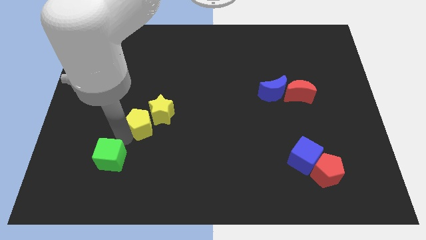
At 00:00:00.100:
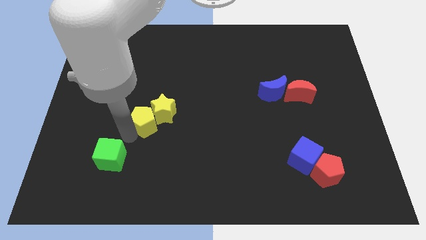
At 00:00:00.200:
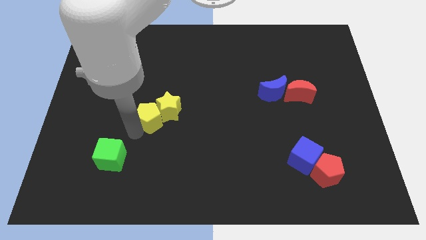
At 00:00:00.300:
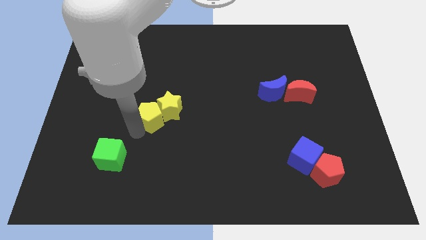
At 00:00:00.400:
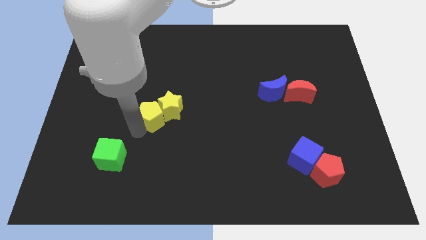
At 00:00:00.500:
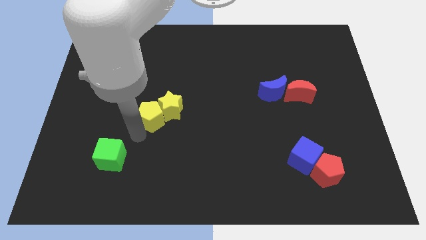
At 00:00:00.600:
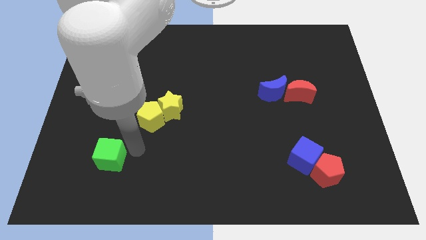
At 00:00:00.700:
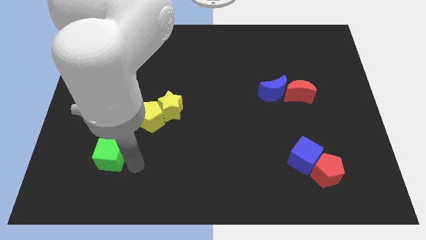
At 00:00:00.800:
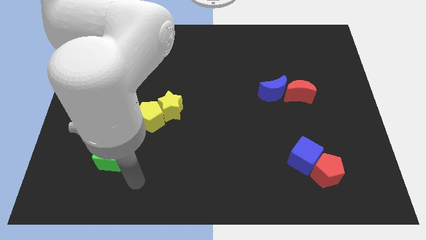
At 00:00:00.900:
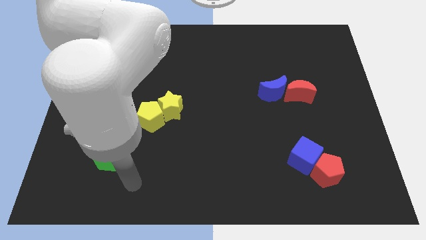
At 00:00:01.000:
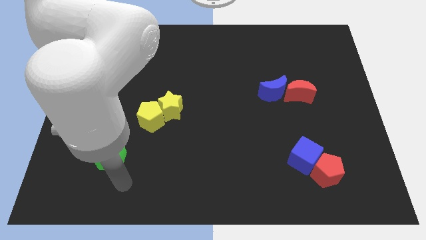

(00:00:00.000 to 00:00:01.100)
push the yellow blocks towards the center of the board

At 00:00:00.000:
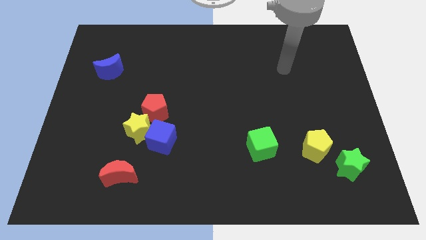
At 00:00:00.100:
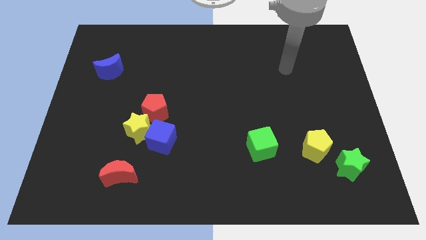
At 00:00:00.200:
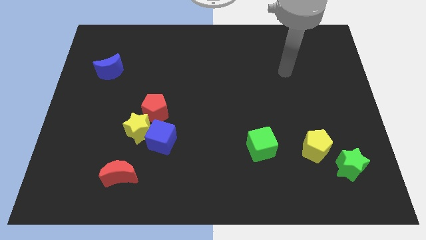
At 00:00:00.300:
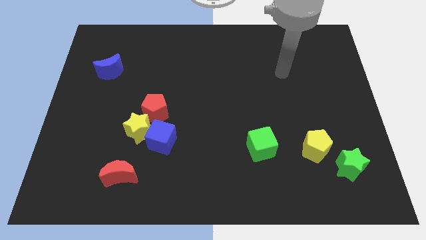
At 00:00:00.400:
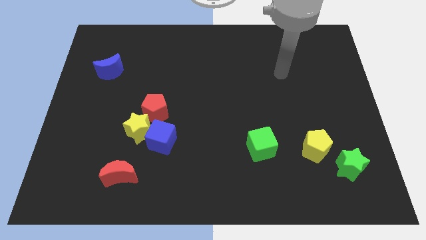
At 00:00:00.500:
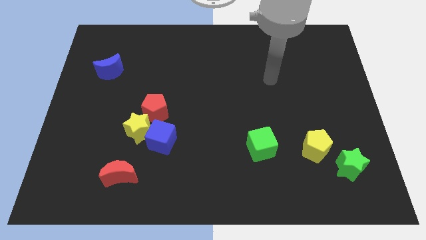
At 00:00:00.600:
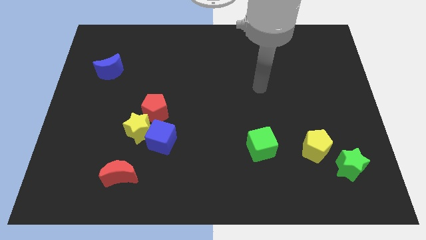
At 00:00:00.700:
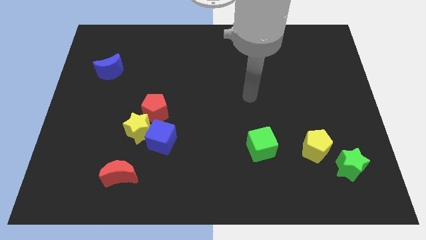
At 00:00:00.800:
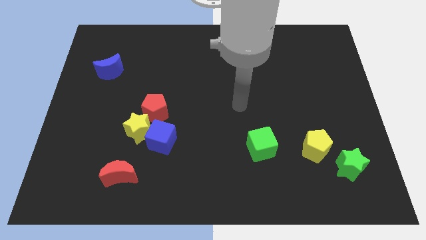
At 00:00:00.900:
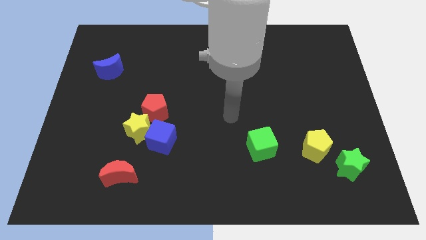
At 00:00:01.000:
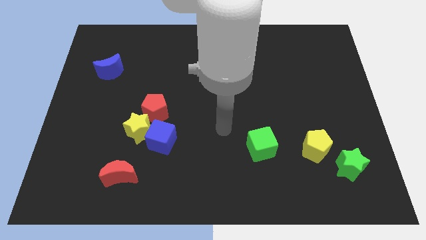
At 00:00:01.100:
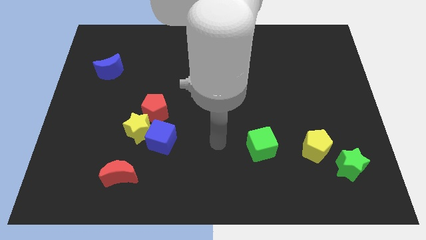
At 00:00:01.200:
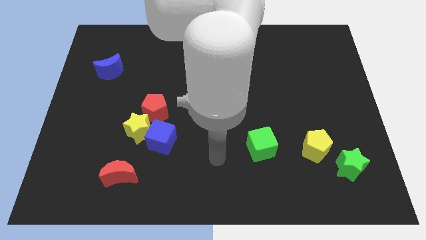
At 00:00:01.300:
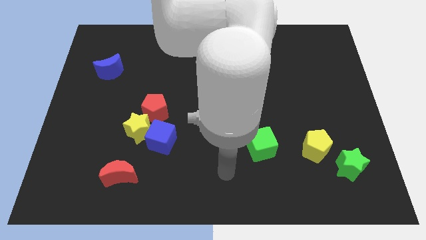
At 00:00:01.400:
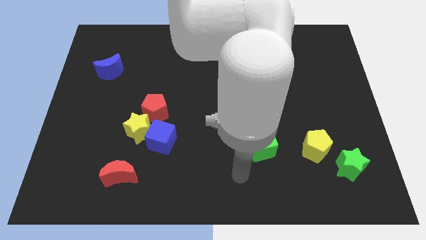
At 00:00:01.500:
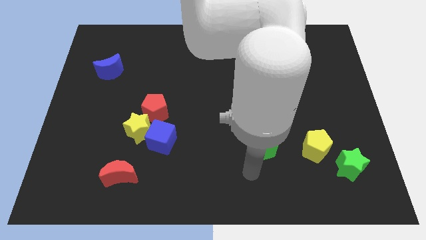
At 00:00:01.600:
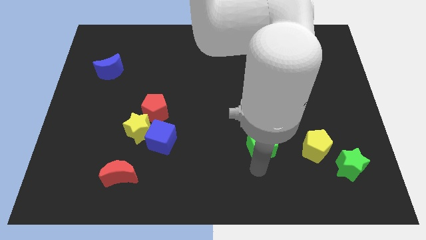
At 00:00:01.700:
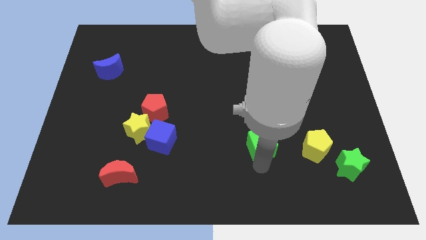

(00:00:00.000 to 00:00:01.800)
move your arm to the bottom left to the green cube

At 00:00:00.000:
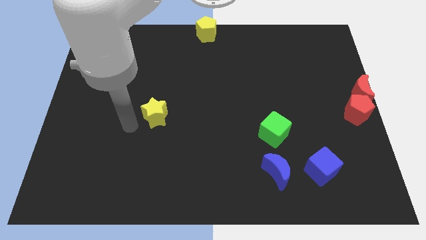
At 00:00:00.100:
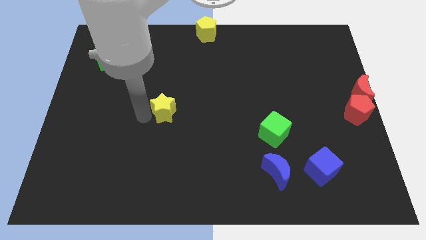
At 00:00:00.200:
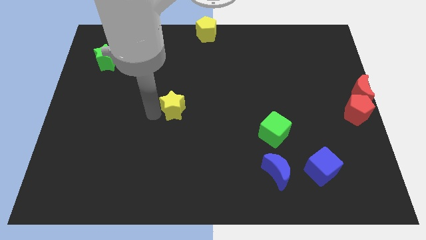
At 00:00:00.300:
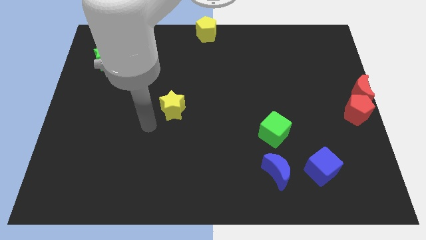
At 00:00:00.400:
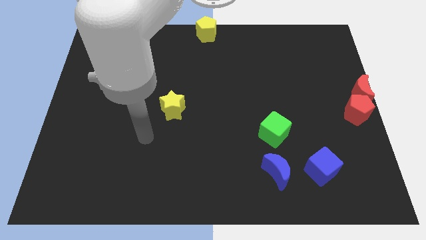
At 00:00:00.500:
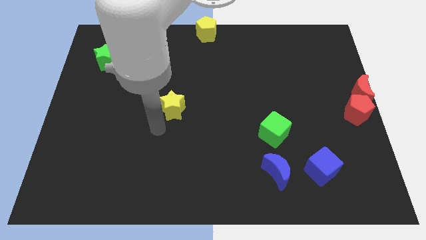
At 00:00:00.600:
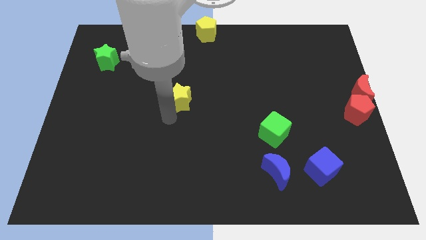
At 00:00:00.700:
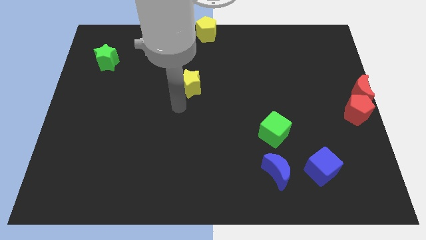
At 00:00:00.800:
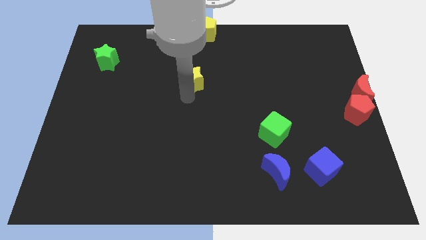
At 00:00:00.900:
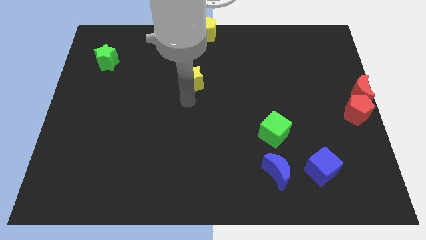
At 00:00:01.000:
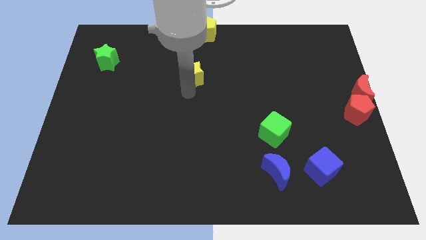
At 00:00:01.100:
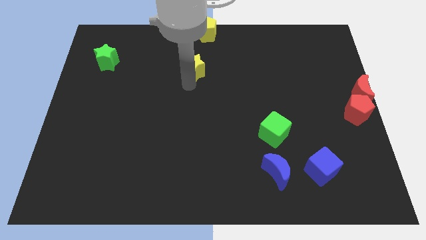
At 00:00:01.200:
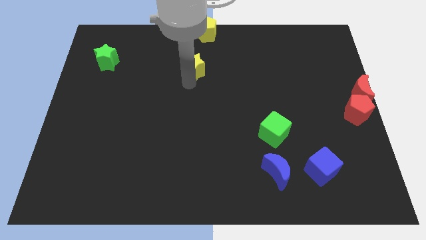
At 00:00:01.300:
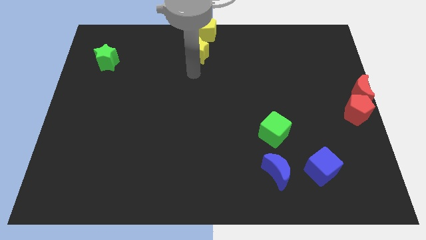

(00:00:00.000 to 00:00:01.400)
move the yellow star close to the yellow pentagon

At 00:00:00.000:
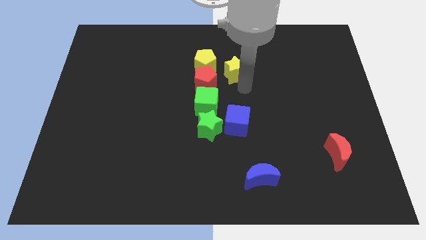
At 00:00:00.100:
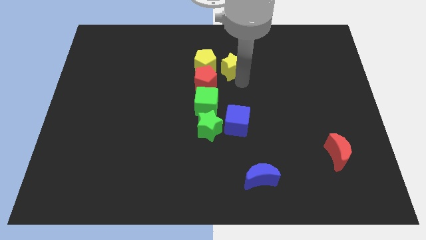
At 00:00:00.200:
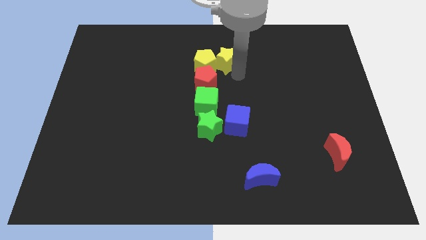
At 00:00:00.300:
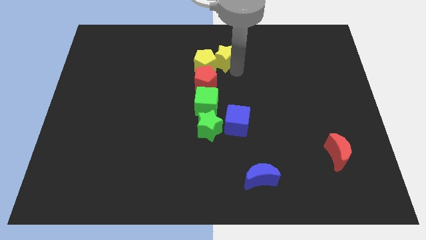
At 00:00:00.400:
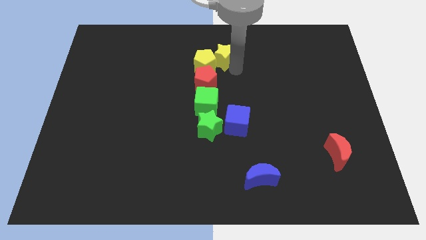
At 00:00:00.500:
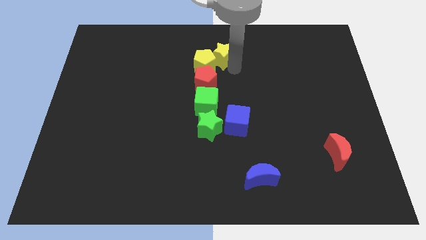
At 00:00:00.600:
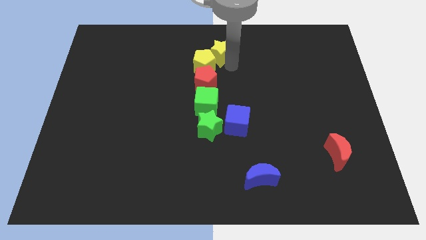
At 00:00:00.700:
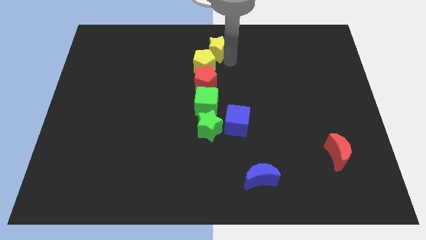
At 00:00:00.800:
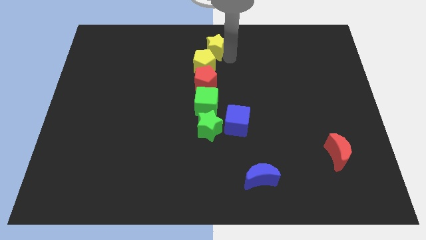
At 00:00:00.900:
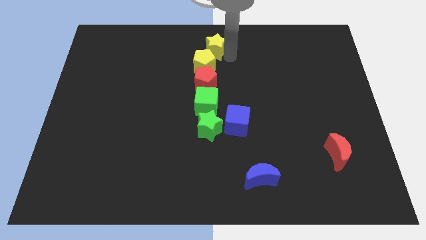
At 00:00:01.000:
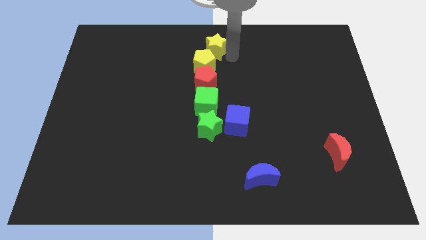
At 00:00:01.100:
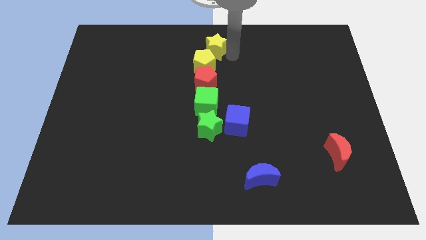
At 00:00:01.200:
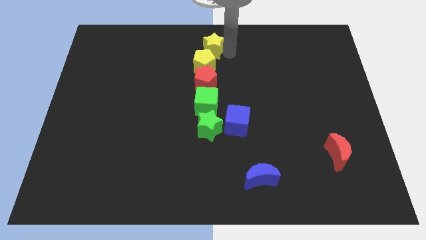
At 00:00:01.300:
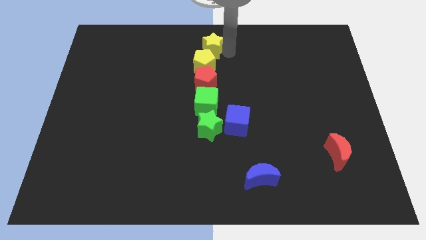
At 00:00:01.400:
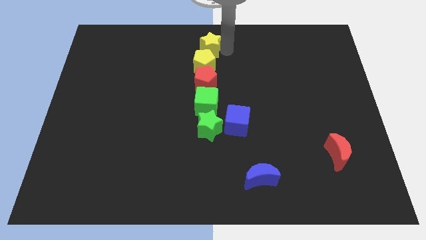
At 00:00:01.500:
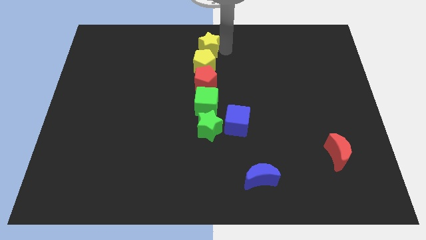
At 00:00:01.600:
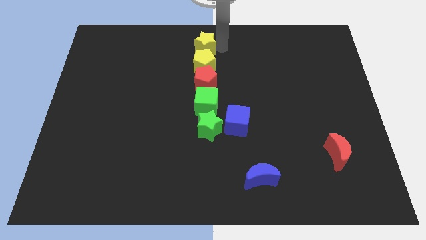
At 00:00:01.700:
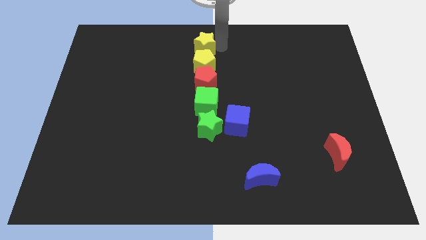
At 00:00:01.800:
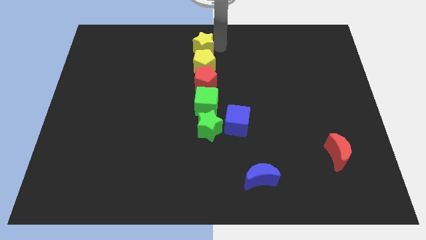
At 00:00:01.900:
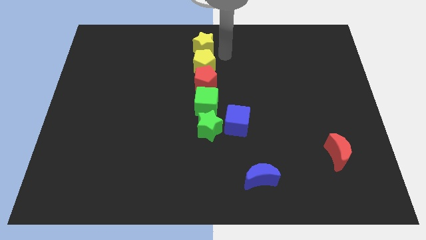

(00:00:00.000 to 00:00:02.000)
move the yellow star to the top of yellow pentagon

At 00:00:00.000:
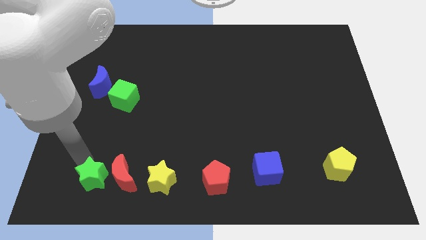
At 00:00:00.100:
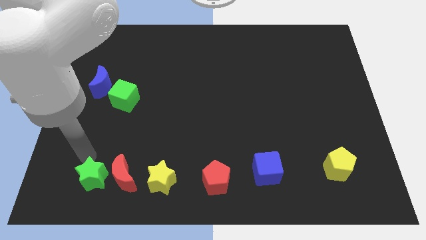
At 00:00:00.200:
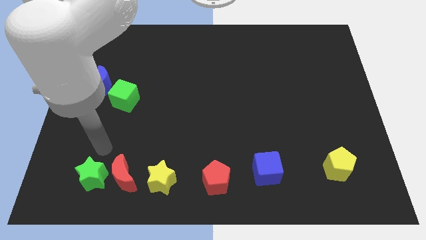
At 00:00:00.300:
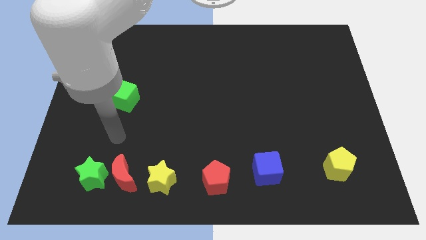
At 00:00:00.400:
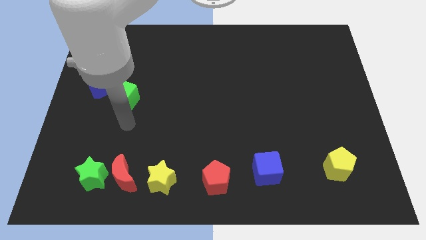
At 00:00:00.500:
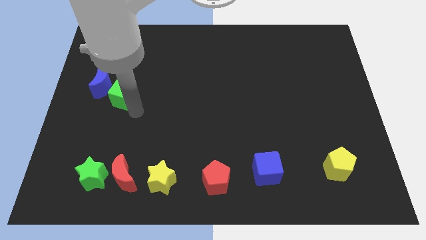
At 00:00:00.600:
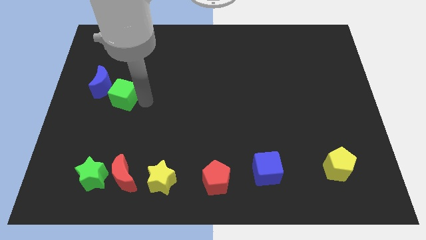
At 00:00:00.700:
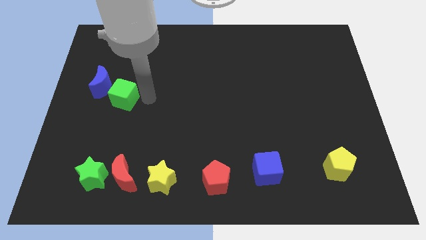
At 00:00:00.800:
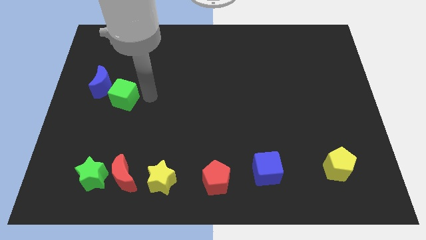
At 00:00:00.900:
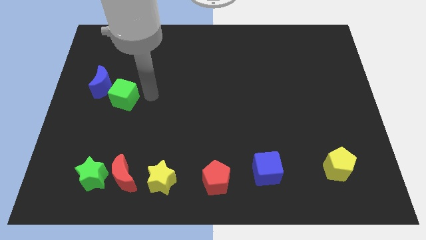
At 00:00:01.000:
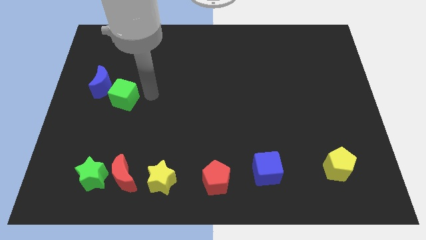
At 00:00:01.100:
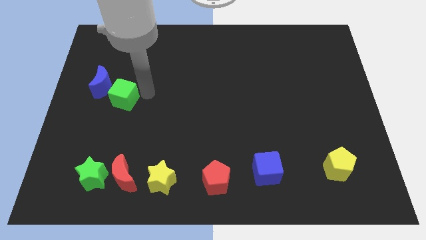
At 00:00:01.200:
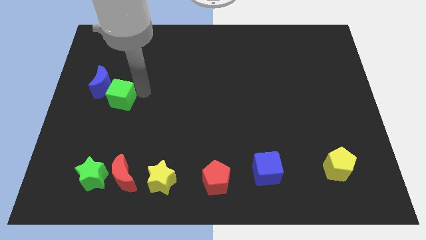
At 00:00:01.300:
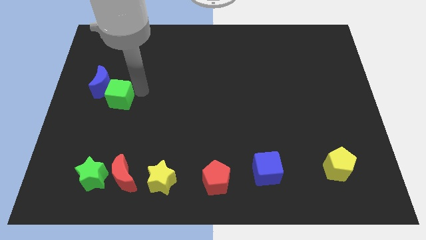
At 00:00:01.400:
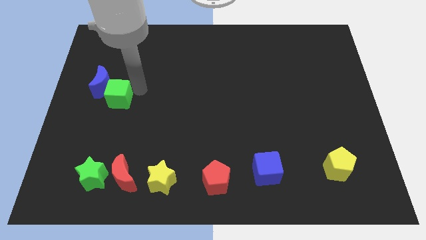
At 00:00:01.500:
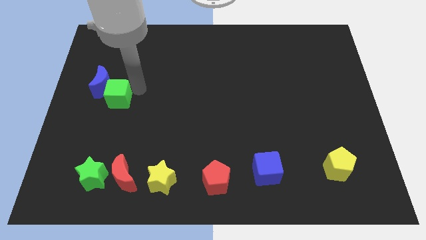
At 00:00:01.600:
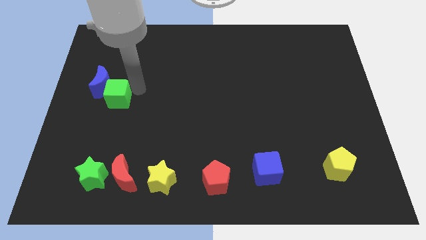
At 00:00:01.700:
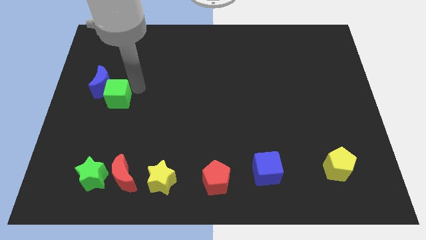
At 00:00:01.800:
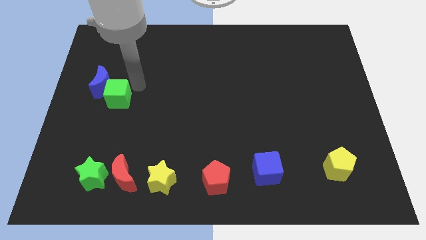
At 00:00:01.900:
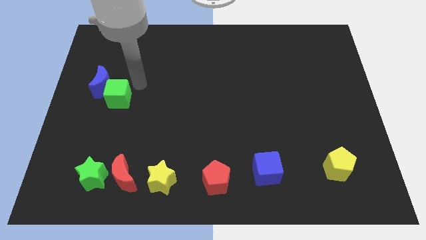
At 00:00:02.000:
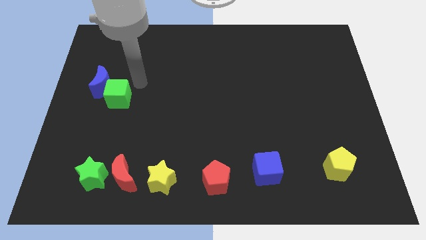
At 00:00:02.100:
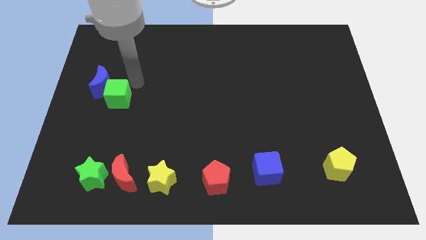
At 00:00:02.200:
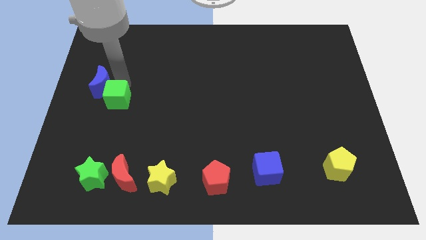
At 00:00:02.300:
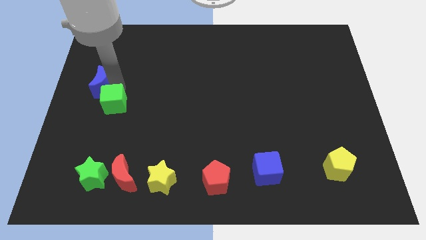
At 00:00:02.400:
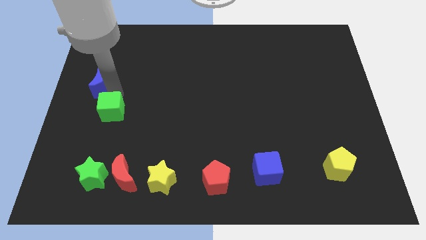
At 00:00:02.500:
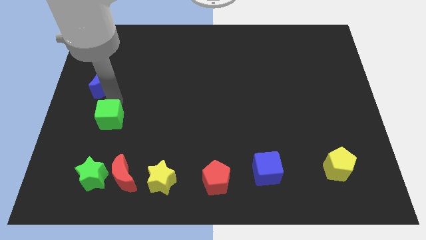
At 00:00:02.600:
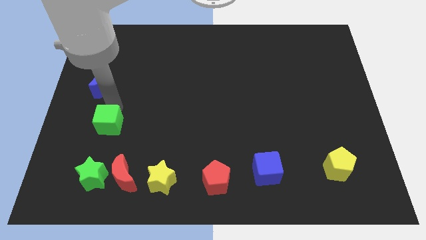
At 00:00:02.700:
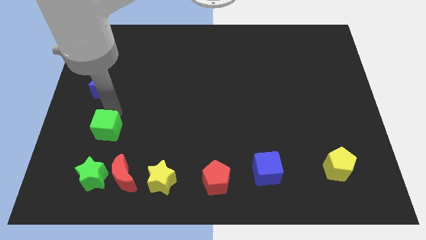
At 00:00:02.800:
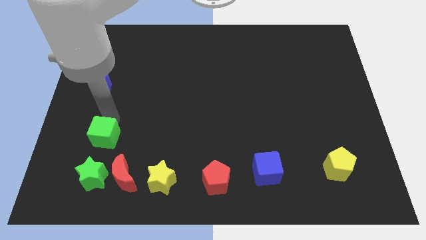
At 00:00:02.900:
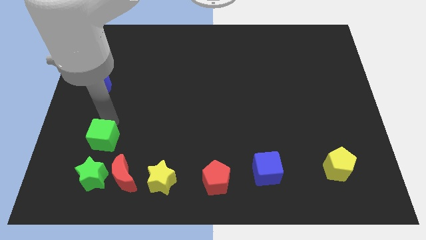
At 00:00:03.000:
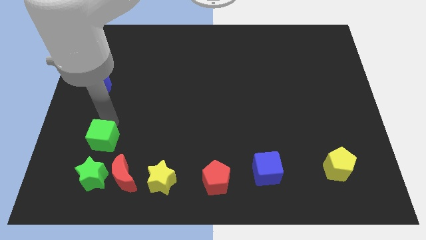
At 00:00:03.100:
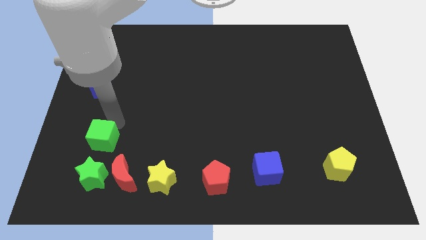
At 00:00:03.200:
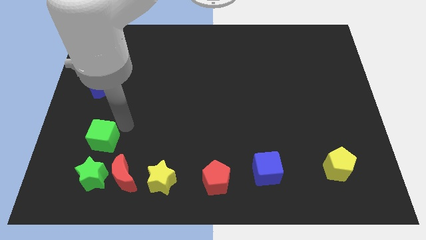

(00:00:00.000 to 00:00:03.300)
place the green cube in between the green star and blue moon
